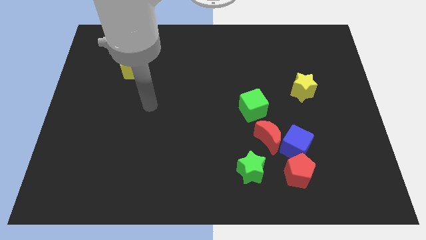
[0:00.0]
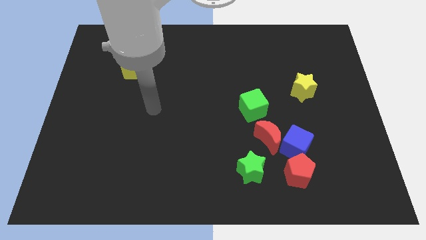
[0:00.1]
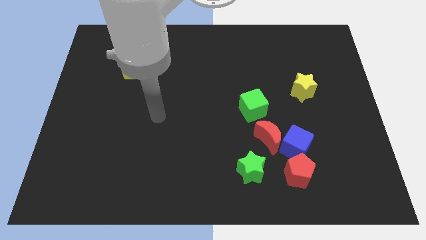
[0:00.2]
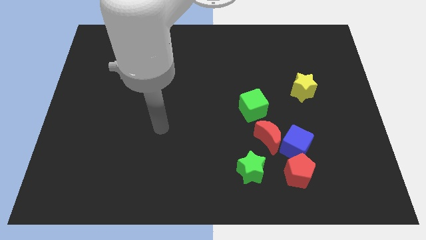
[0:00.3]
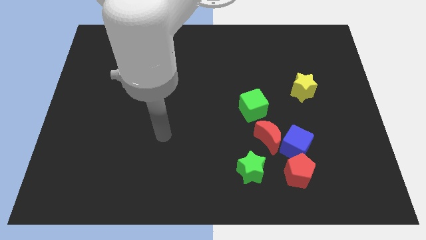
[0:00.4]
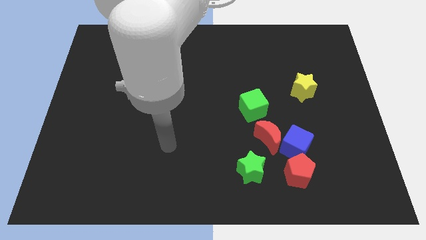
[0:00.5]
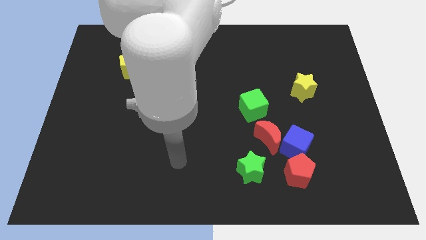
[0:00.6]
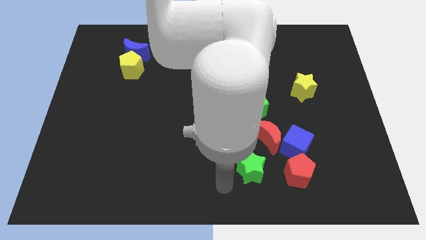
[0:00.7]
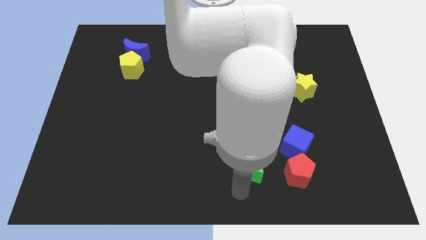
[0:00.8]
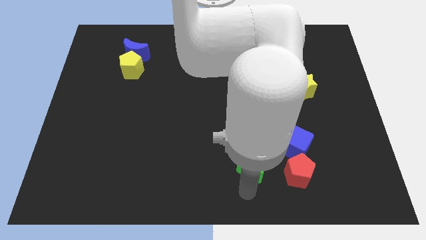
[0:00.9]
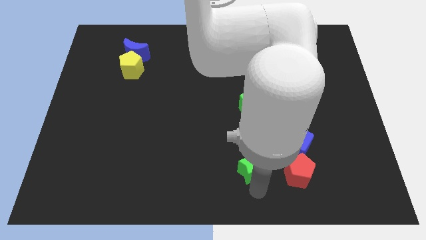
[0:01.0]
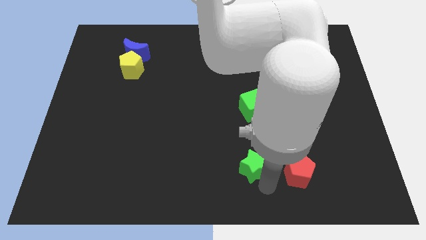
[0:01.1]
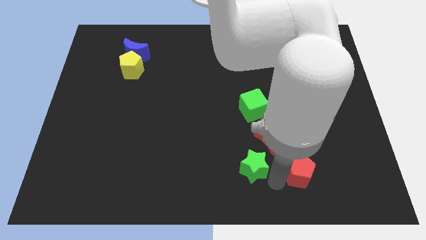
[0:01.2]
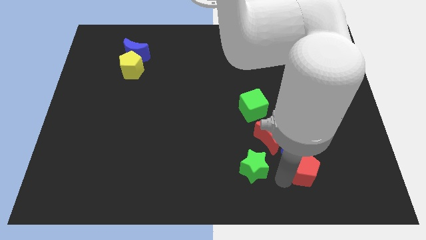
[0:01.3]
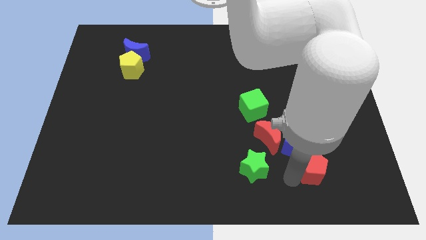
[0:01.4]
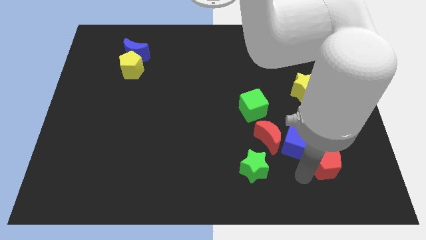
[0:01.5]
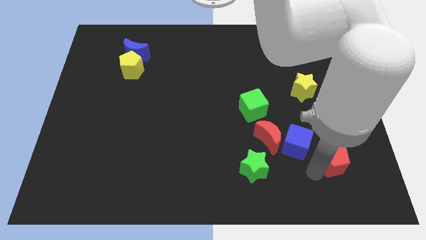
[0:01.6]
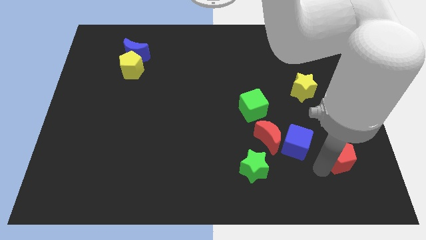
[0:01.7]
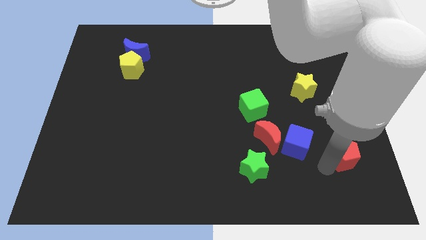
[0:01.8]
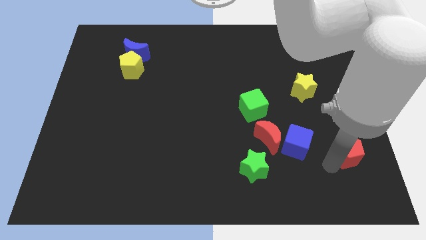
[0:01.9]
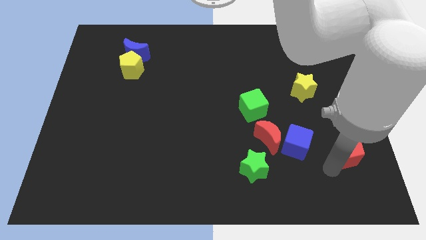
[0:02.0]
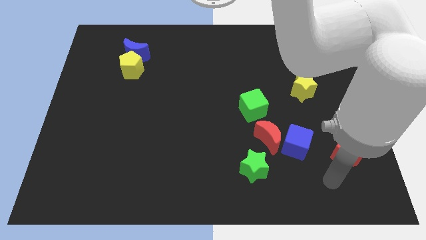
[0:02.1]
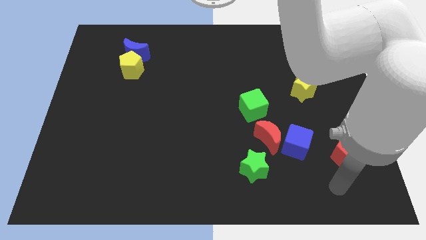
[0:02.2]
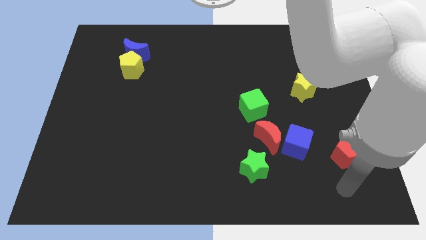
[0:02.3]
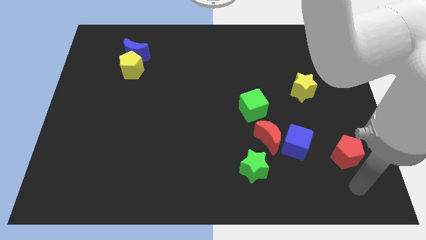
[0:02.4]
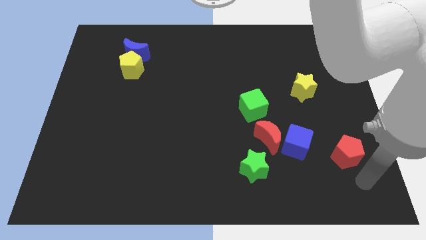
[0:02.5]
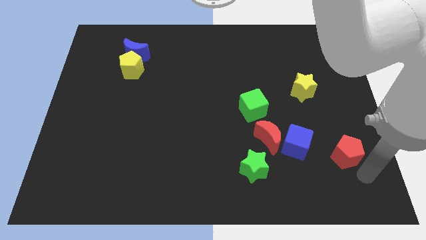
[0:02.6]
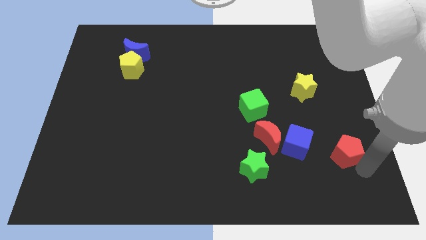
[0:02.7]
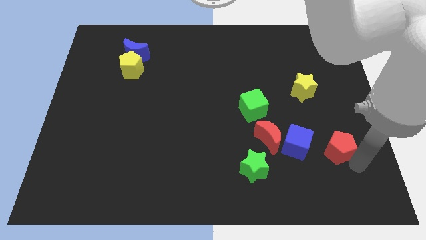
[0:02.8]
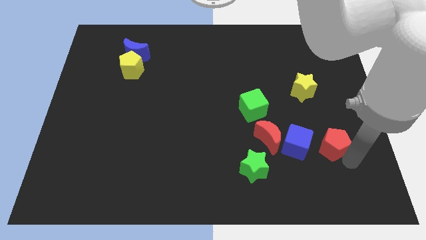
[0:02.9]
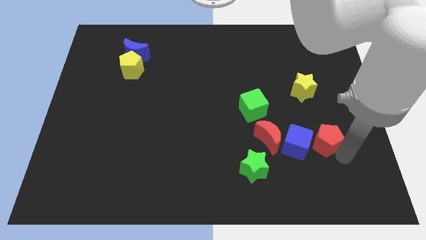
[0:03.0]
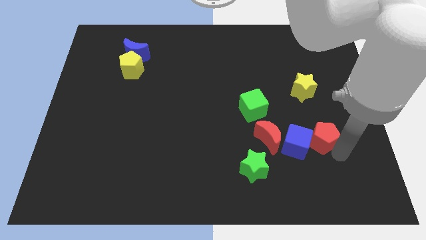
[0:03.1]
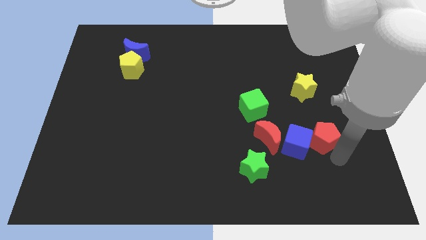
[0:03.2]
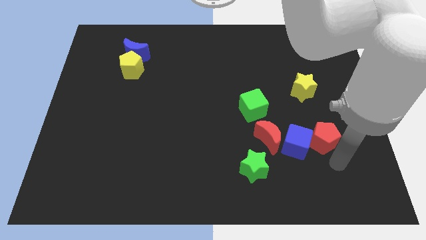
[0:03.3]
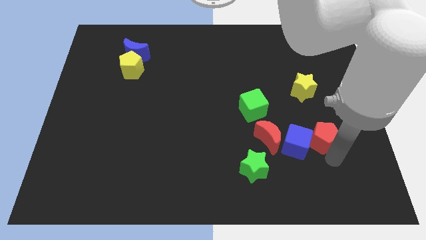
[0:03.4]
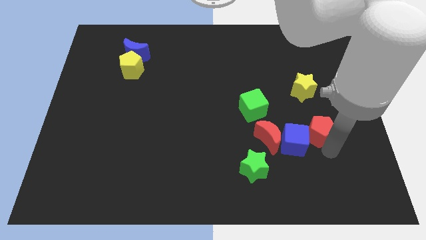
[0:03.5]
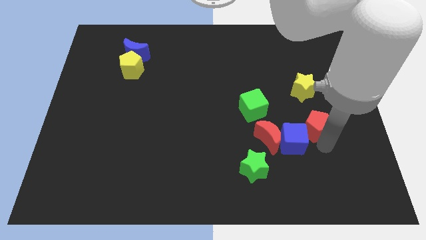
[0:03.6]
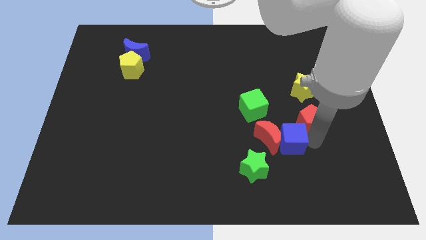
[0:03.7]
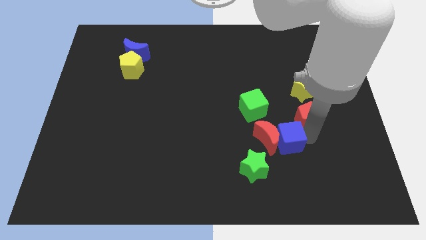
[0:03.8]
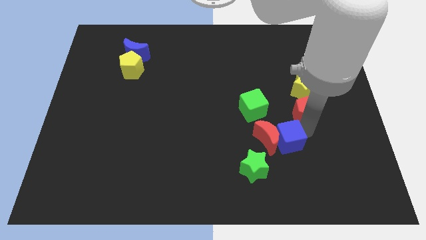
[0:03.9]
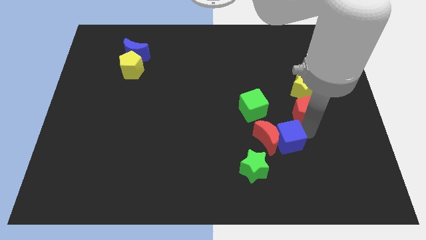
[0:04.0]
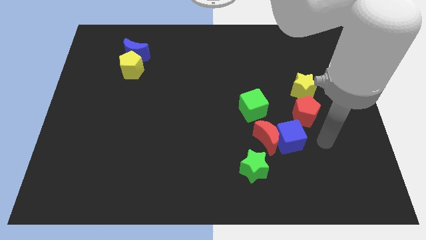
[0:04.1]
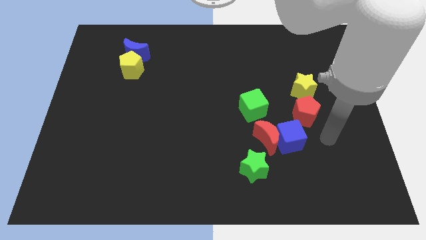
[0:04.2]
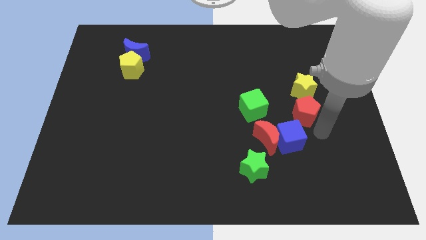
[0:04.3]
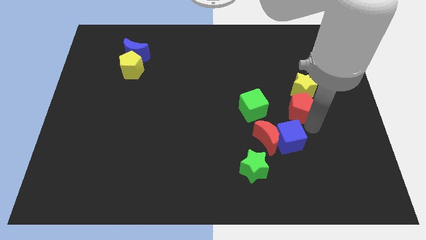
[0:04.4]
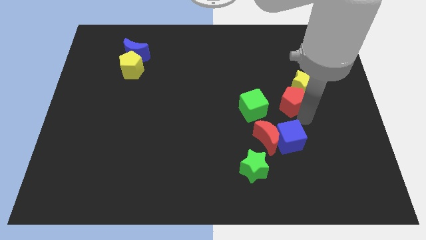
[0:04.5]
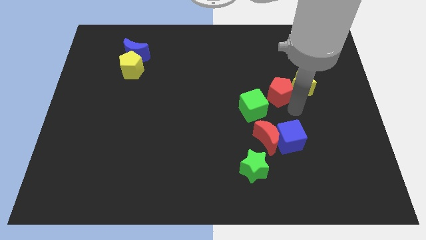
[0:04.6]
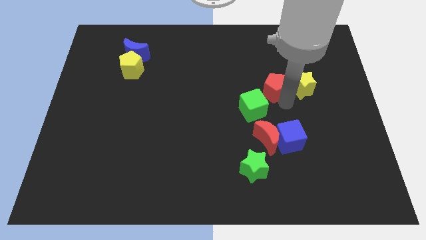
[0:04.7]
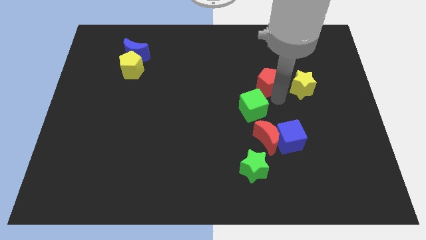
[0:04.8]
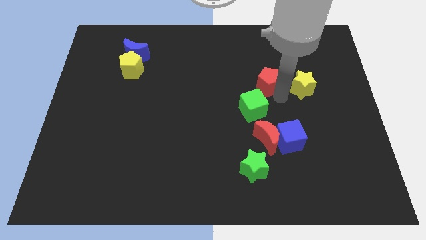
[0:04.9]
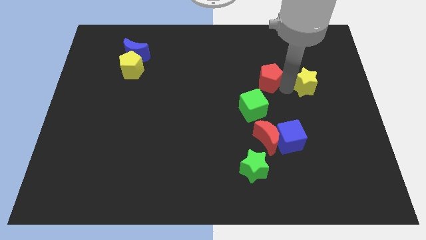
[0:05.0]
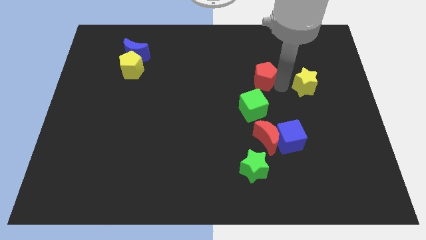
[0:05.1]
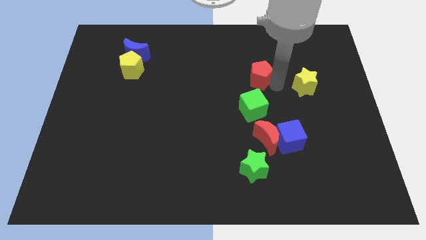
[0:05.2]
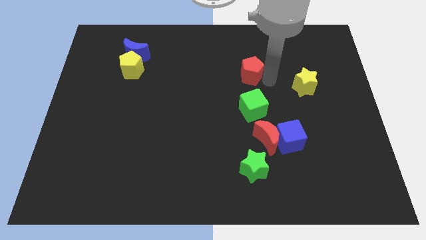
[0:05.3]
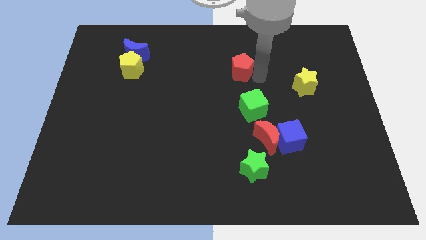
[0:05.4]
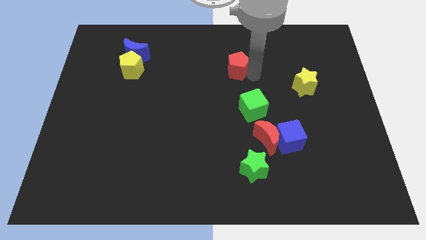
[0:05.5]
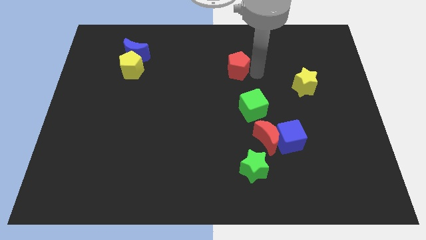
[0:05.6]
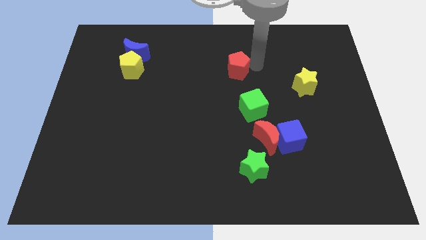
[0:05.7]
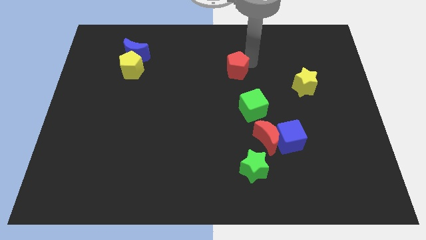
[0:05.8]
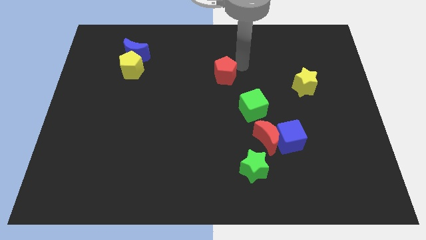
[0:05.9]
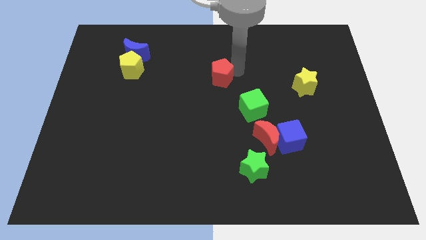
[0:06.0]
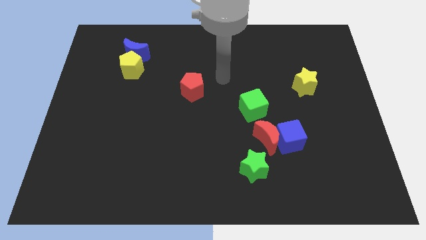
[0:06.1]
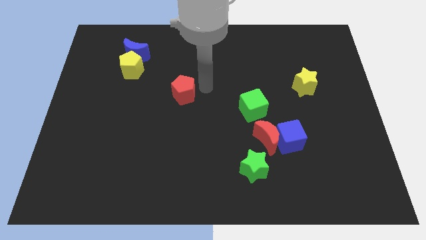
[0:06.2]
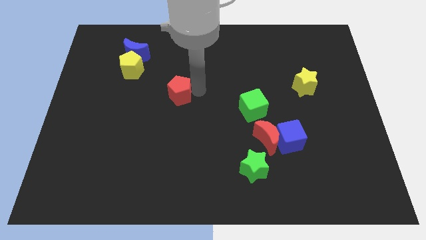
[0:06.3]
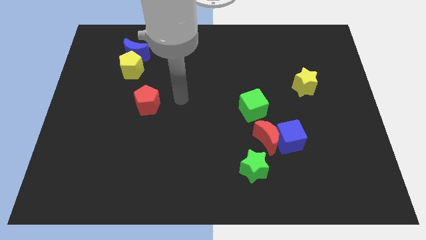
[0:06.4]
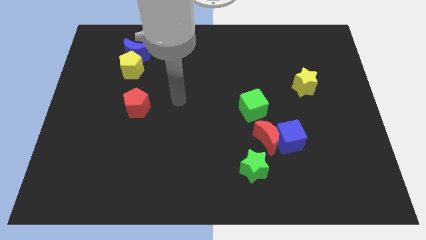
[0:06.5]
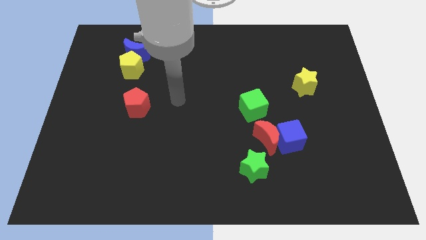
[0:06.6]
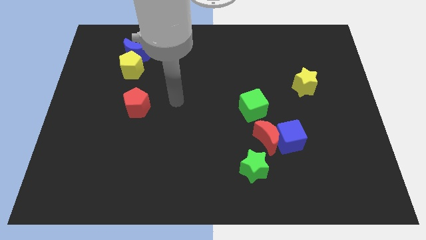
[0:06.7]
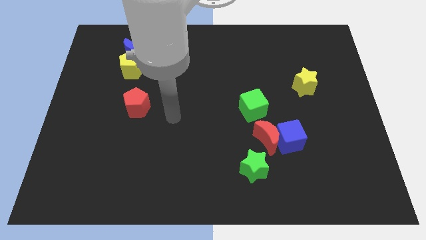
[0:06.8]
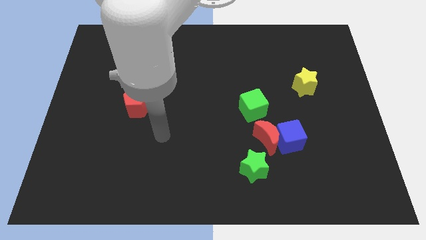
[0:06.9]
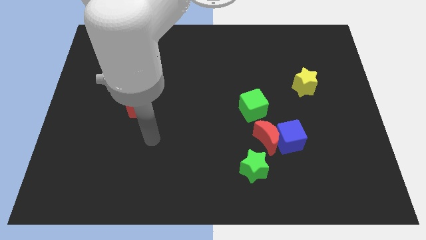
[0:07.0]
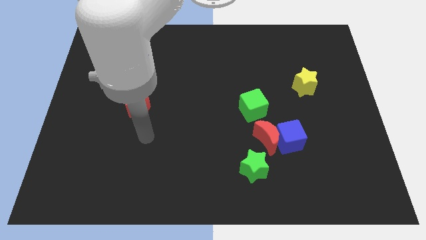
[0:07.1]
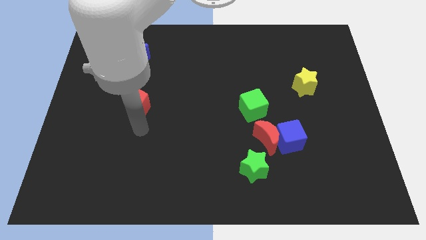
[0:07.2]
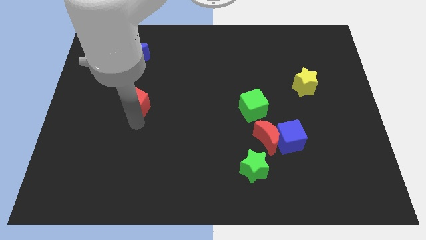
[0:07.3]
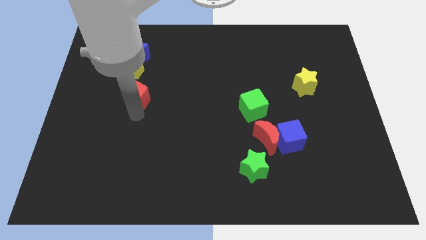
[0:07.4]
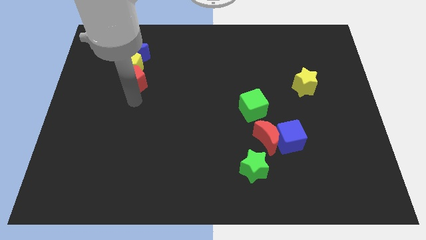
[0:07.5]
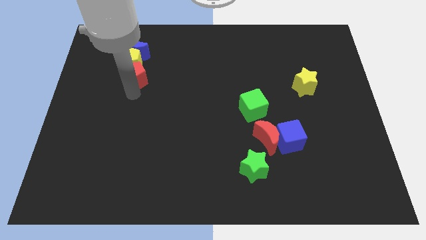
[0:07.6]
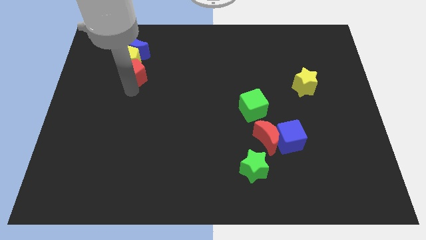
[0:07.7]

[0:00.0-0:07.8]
move the red pentagon to the yellow pentagon

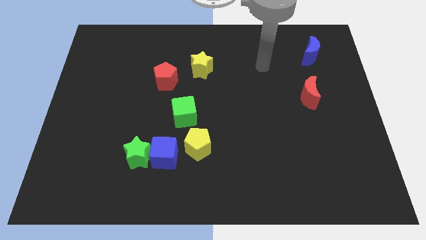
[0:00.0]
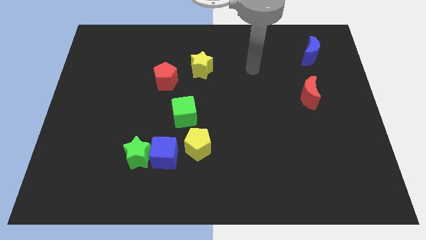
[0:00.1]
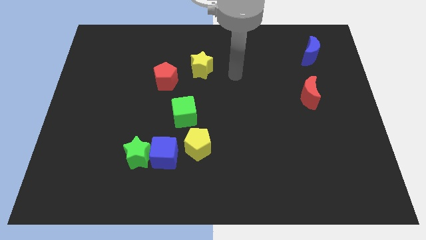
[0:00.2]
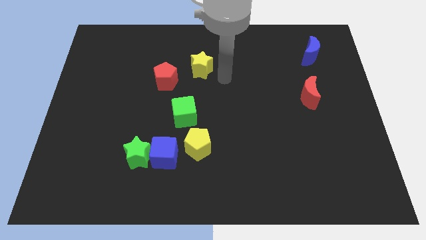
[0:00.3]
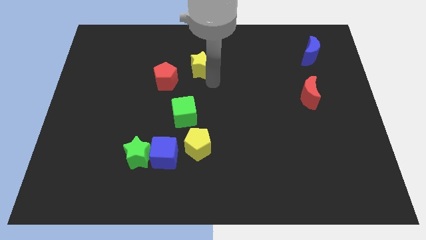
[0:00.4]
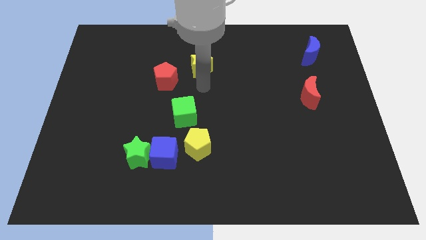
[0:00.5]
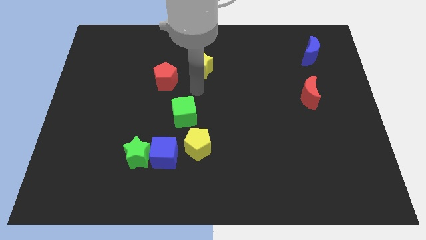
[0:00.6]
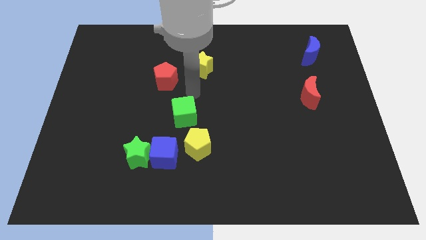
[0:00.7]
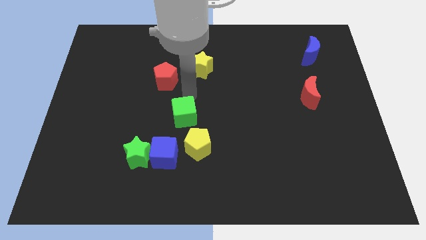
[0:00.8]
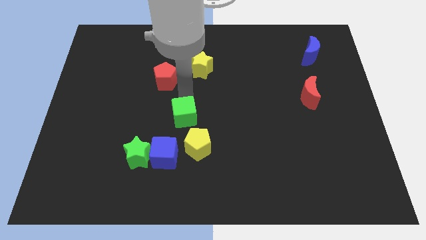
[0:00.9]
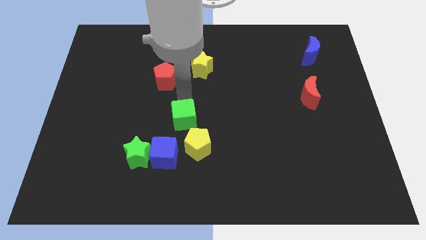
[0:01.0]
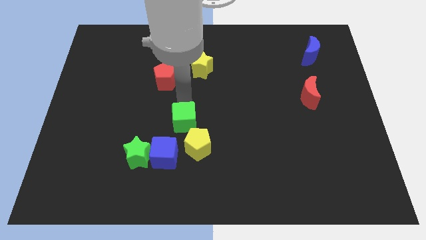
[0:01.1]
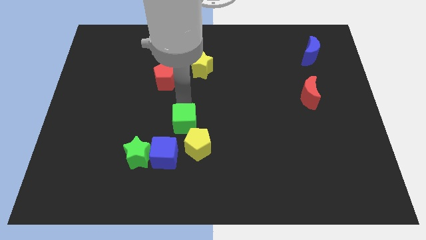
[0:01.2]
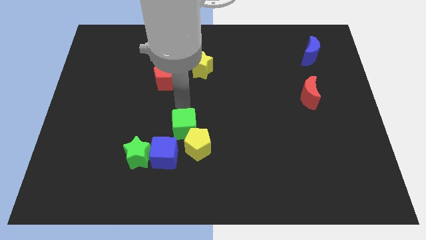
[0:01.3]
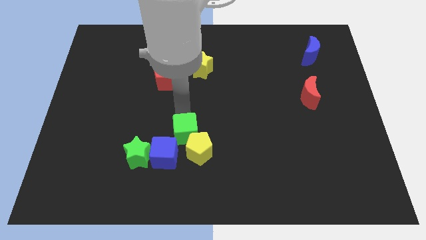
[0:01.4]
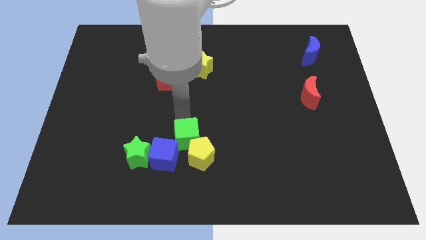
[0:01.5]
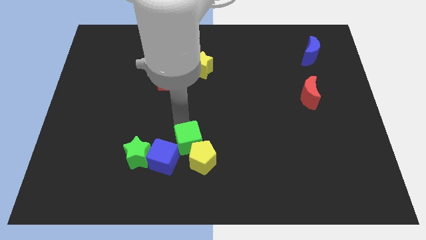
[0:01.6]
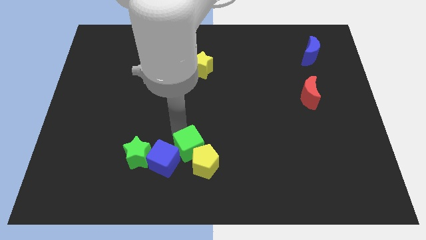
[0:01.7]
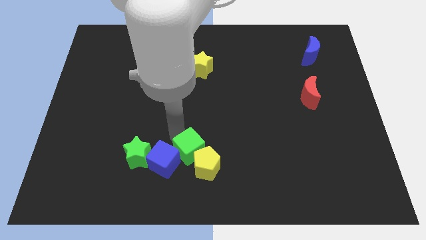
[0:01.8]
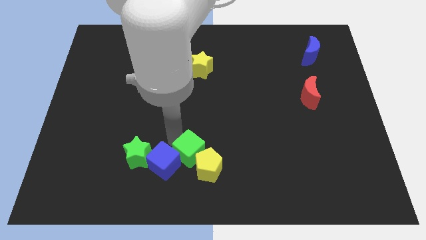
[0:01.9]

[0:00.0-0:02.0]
push the green cube towards the blue cube
